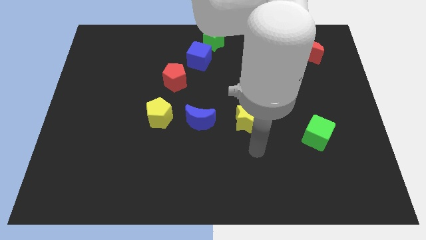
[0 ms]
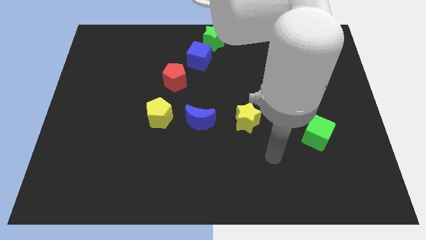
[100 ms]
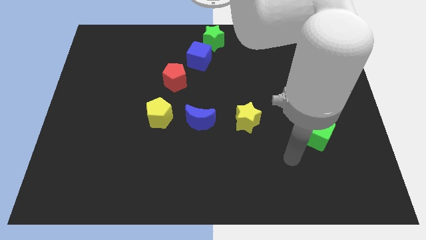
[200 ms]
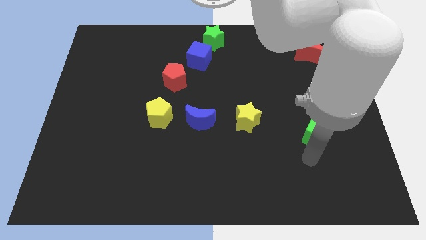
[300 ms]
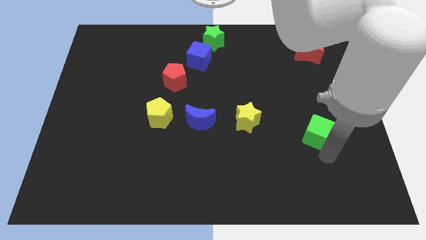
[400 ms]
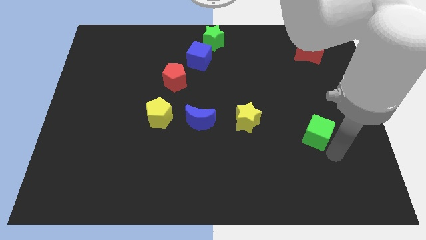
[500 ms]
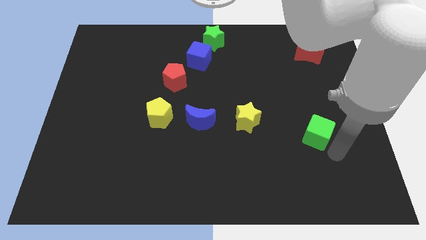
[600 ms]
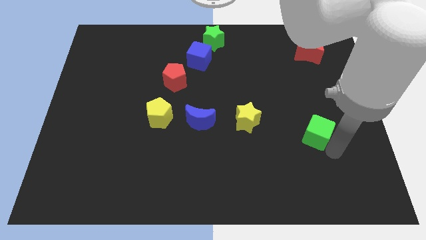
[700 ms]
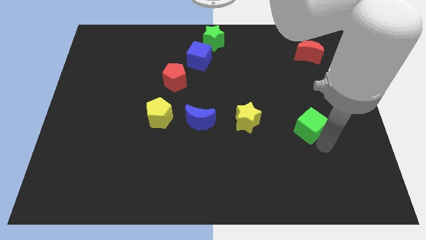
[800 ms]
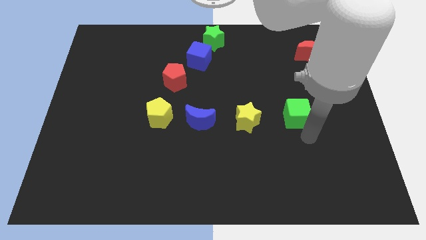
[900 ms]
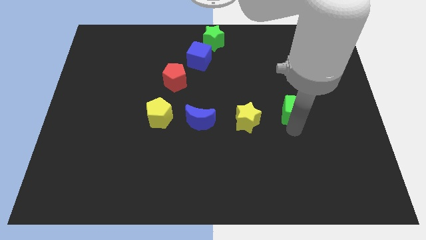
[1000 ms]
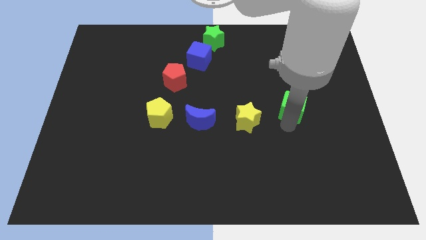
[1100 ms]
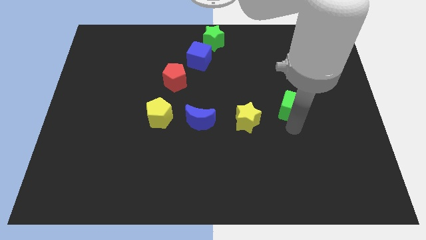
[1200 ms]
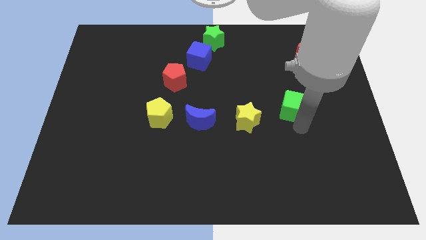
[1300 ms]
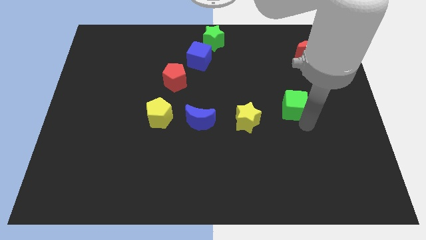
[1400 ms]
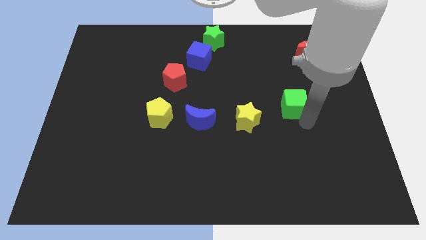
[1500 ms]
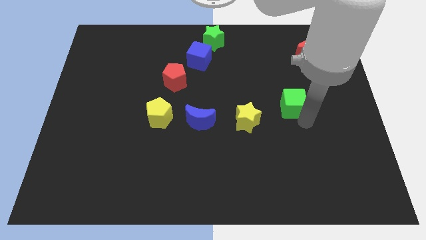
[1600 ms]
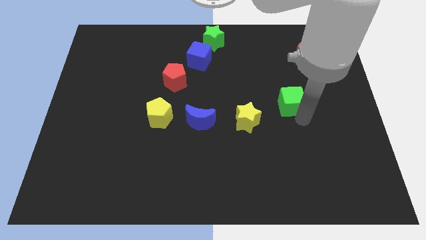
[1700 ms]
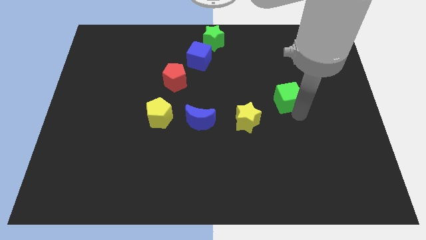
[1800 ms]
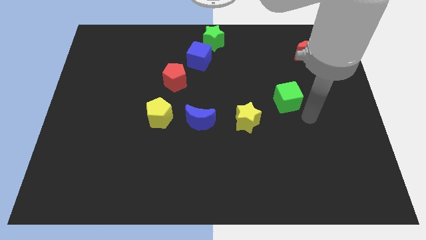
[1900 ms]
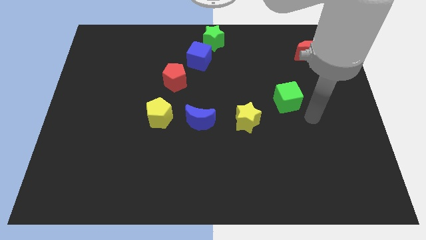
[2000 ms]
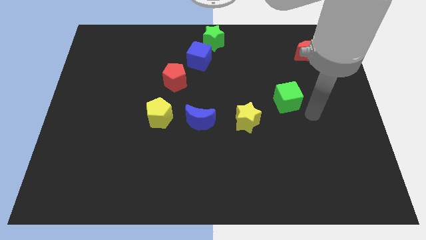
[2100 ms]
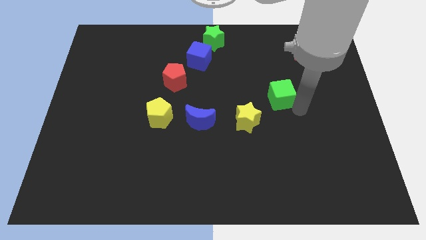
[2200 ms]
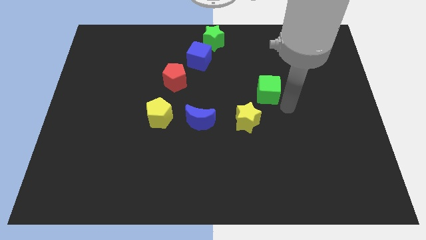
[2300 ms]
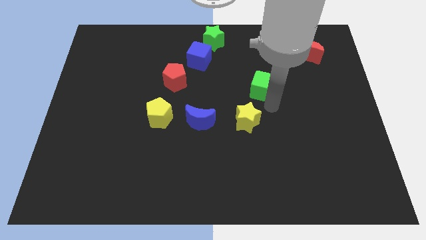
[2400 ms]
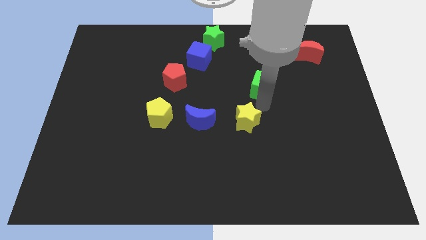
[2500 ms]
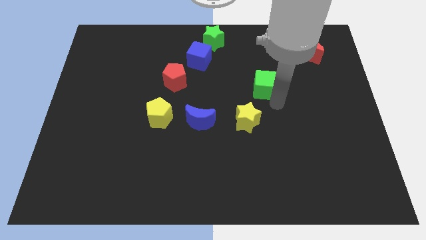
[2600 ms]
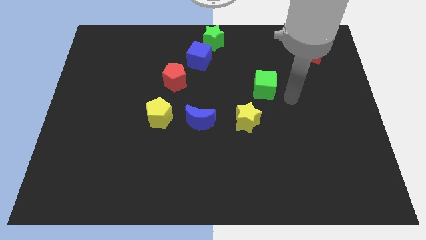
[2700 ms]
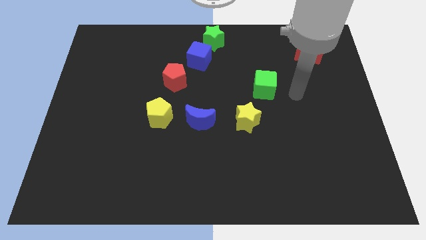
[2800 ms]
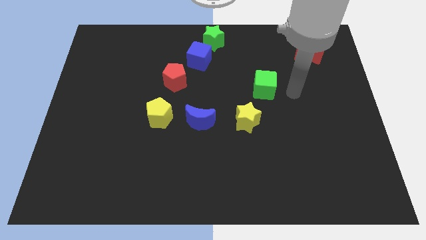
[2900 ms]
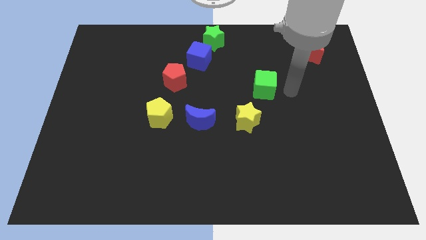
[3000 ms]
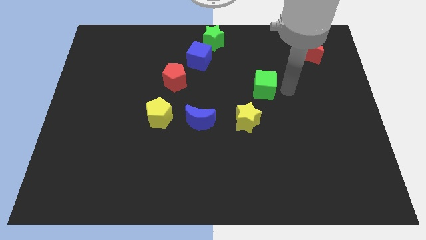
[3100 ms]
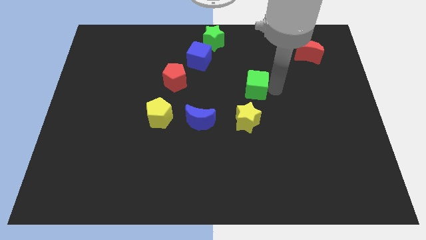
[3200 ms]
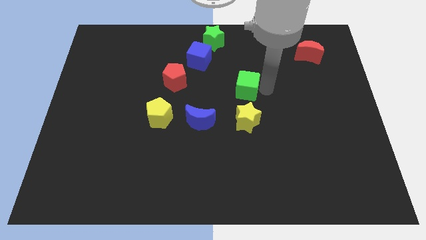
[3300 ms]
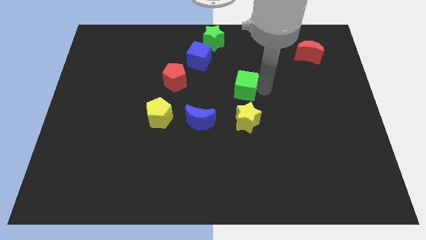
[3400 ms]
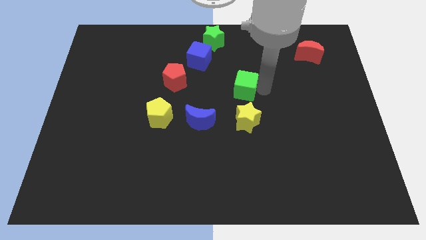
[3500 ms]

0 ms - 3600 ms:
put the green cube at the top side of the yellow star

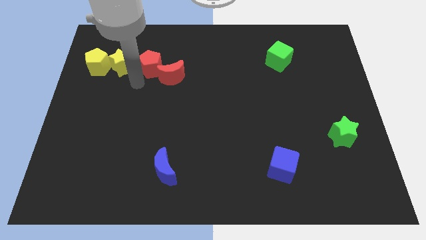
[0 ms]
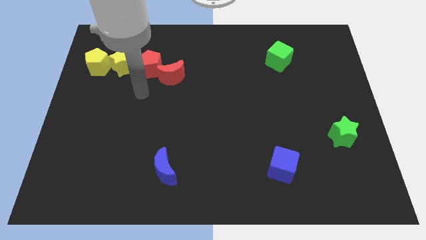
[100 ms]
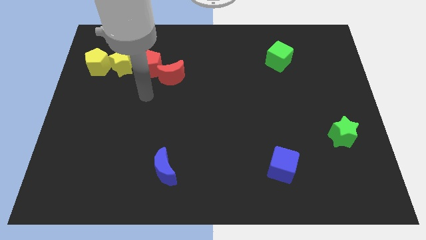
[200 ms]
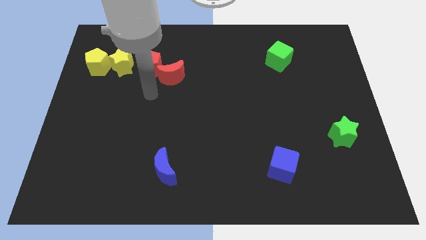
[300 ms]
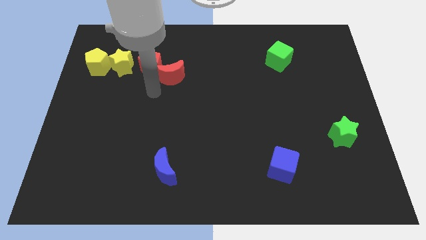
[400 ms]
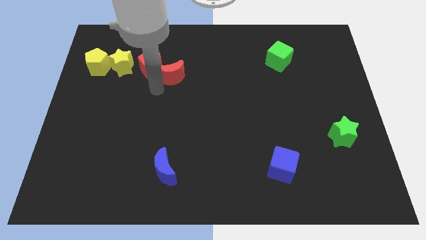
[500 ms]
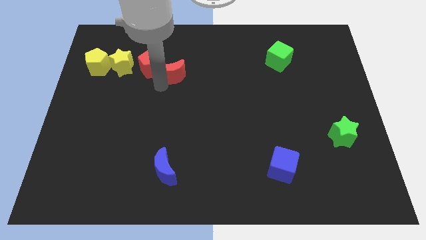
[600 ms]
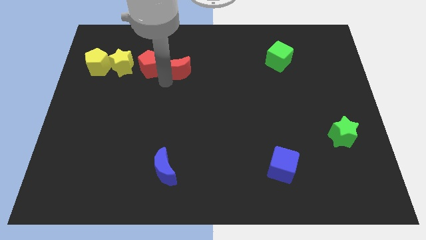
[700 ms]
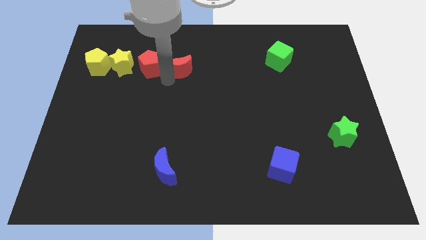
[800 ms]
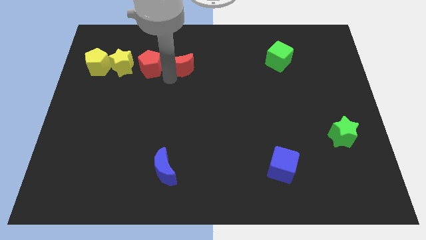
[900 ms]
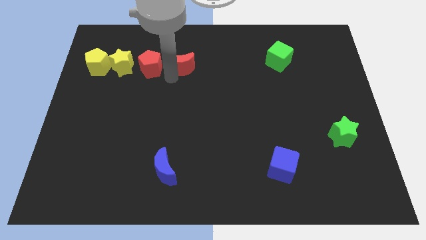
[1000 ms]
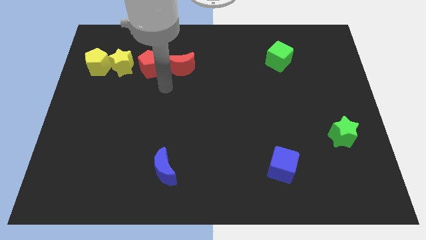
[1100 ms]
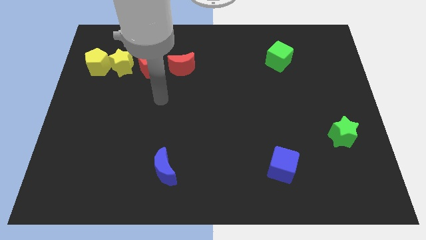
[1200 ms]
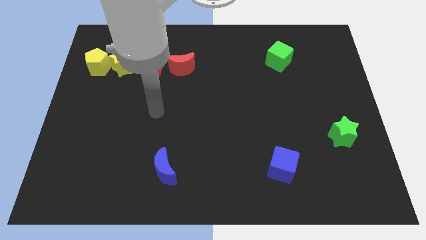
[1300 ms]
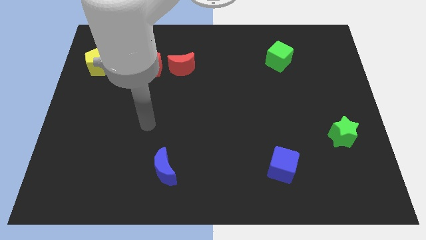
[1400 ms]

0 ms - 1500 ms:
move the red moon upwards slightly

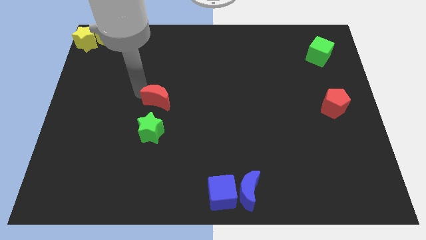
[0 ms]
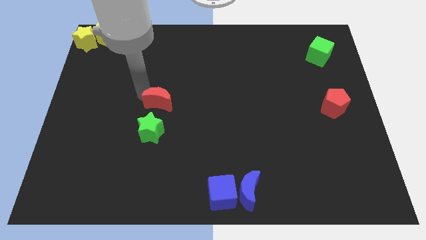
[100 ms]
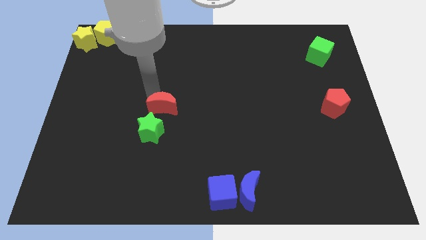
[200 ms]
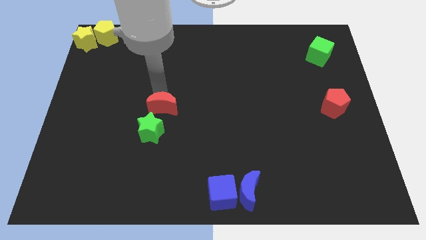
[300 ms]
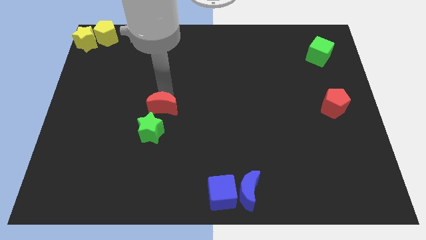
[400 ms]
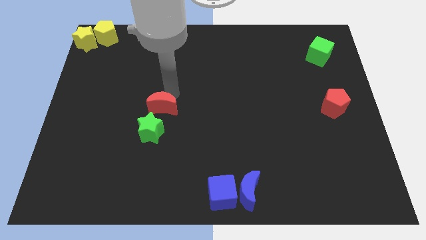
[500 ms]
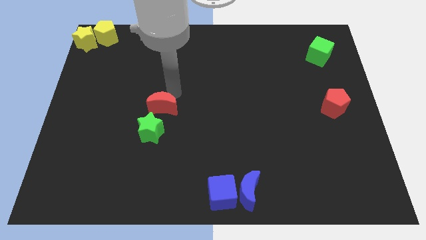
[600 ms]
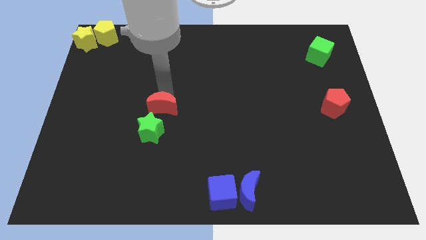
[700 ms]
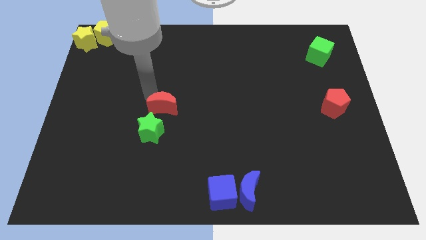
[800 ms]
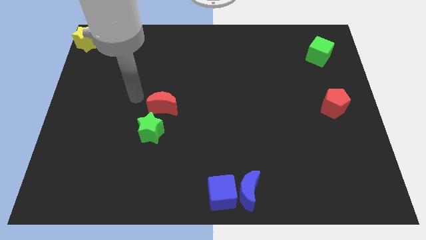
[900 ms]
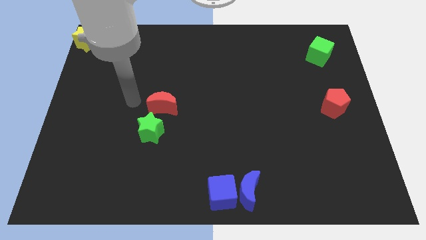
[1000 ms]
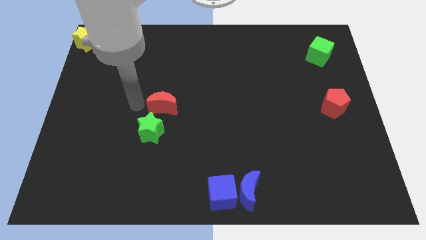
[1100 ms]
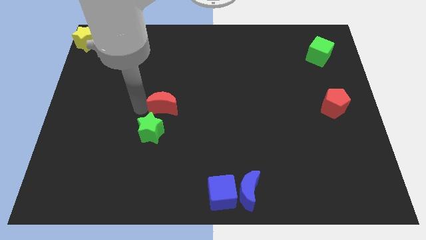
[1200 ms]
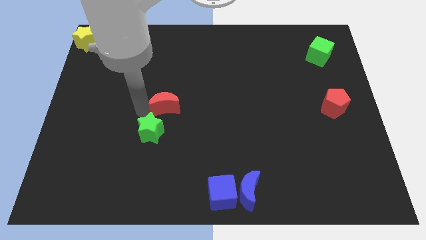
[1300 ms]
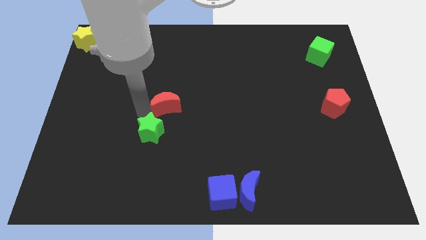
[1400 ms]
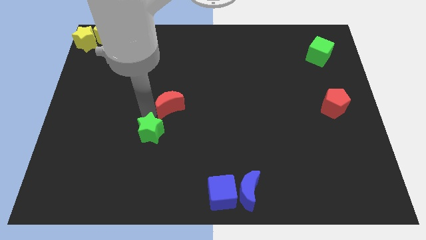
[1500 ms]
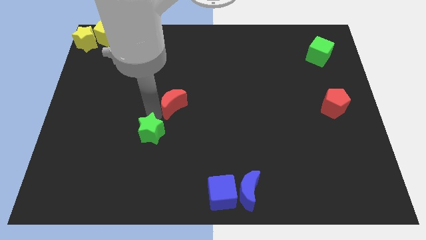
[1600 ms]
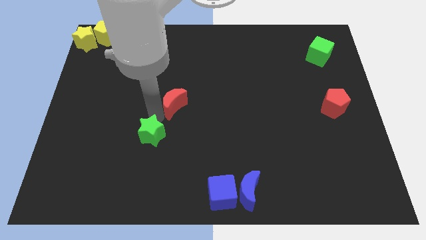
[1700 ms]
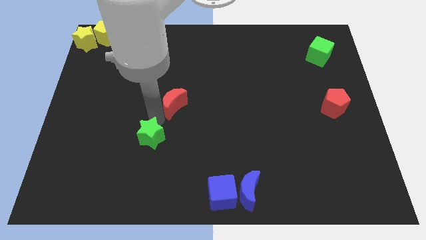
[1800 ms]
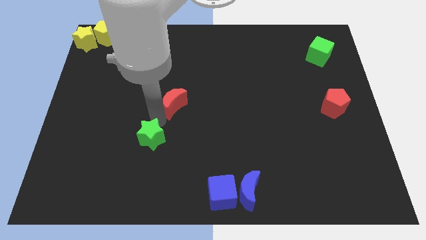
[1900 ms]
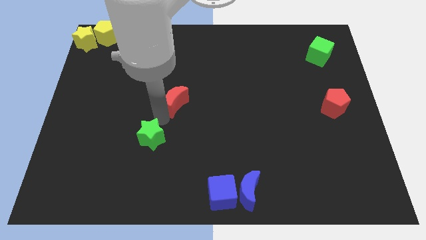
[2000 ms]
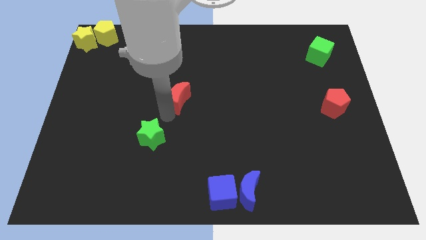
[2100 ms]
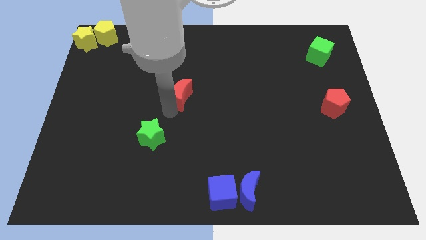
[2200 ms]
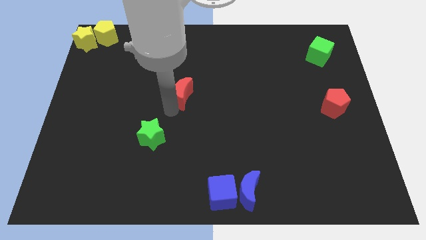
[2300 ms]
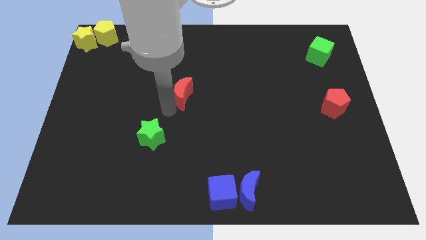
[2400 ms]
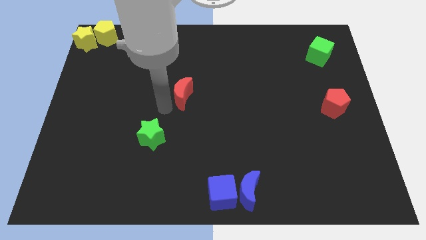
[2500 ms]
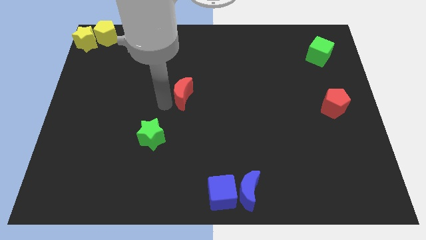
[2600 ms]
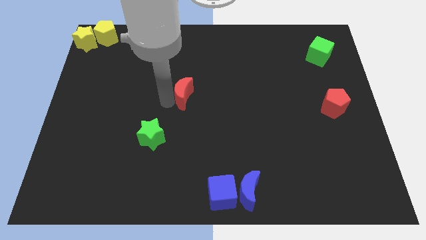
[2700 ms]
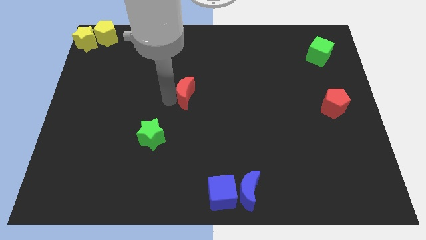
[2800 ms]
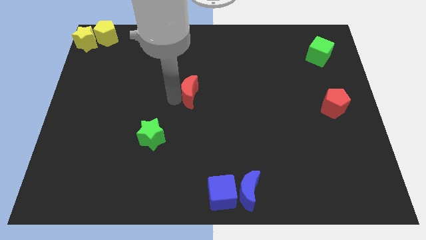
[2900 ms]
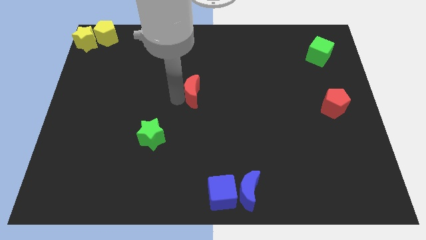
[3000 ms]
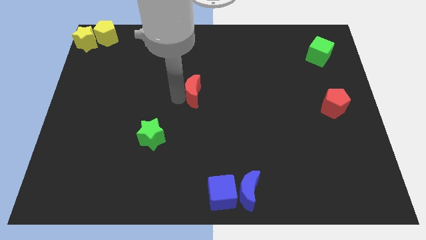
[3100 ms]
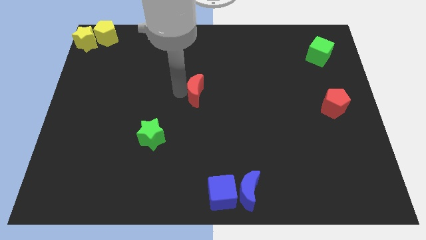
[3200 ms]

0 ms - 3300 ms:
place the red moon to the center

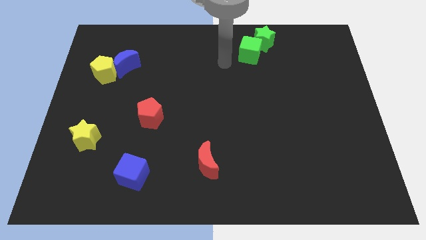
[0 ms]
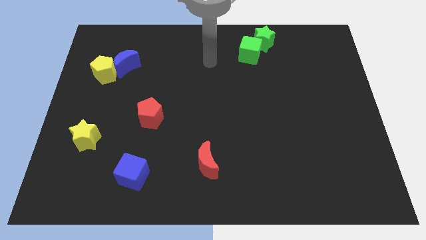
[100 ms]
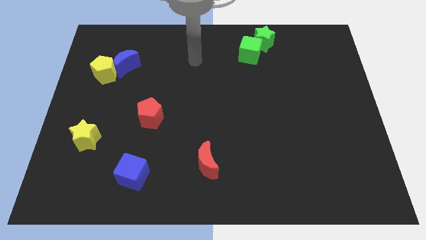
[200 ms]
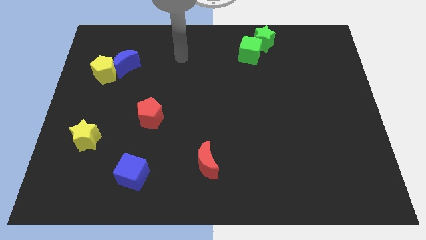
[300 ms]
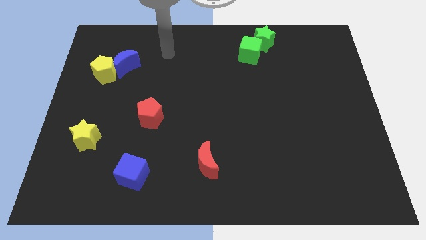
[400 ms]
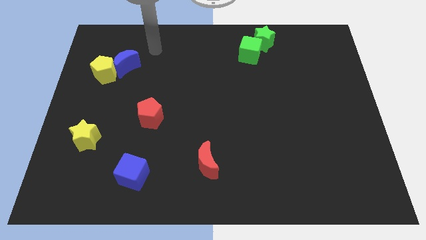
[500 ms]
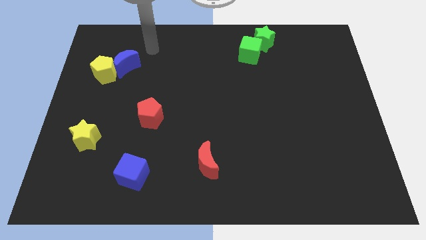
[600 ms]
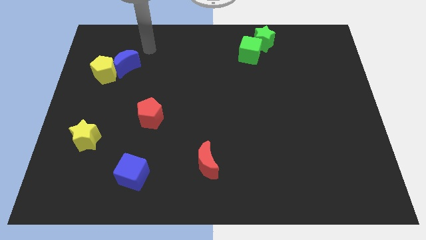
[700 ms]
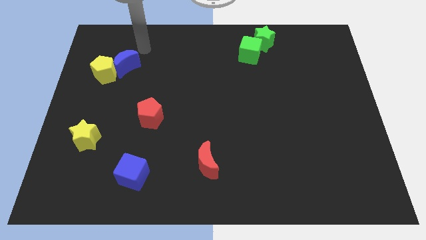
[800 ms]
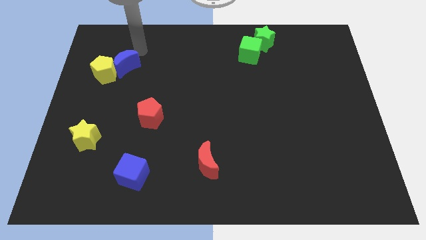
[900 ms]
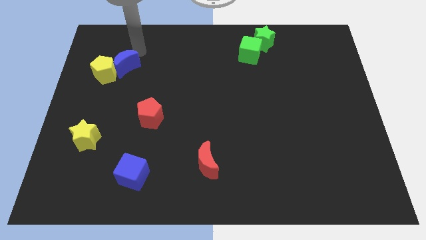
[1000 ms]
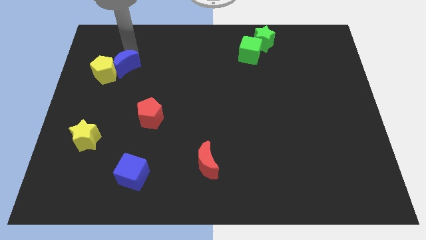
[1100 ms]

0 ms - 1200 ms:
place your arm above the blue crescent
